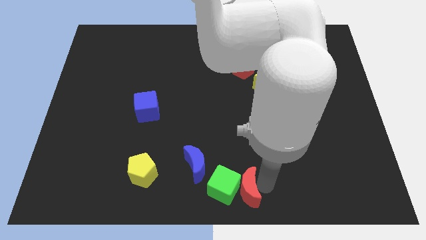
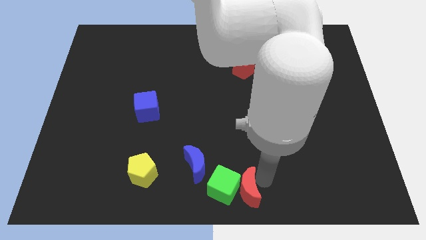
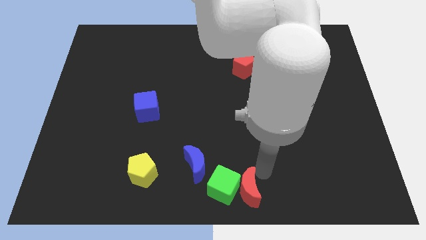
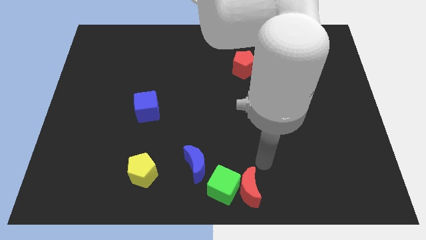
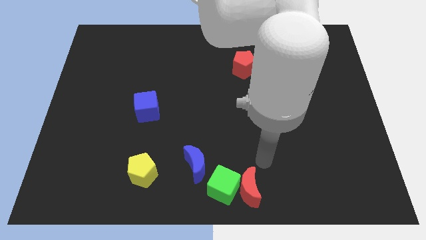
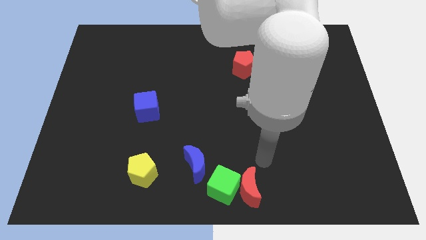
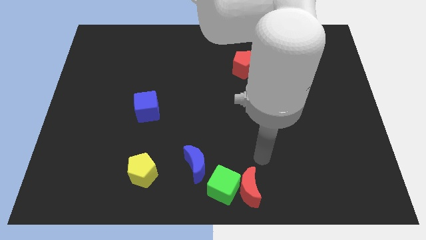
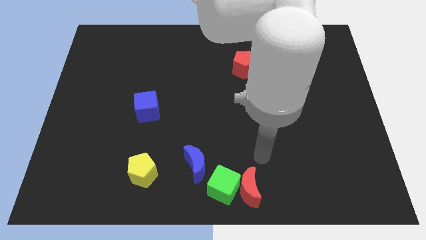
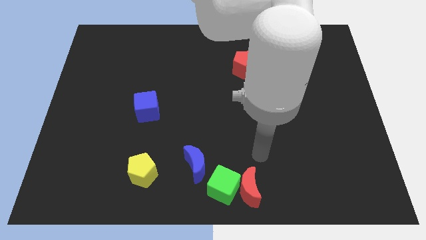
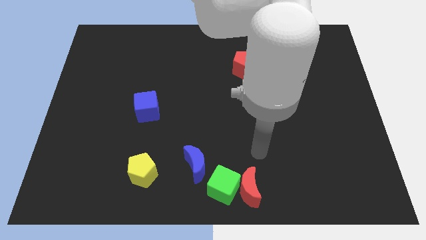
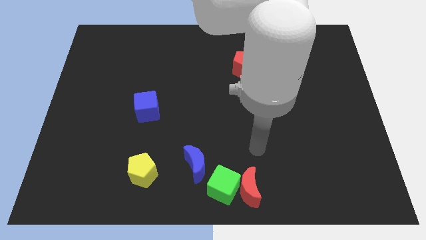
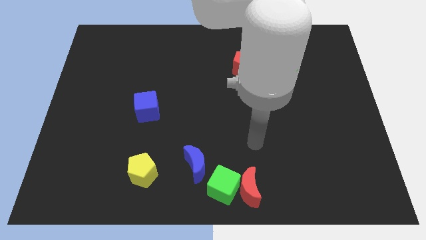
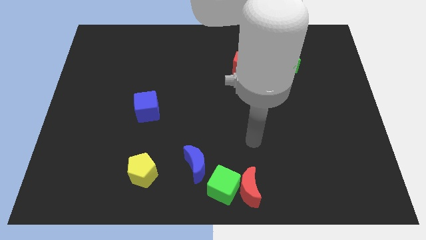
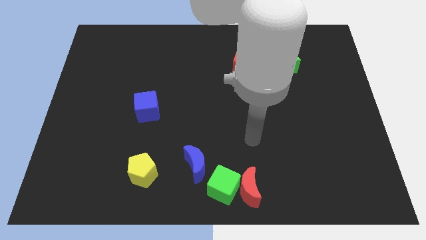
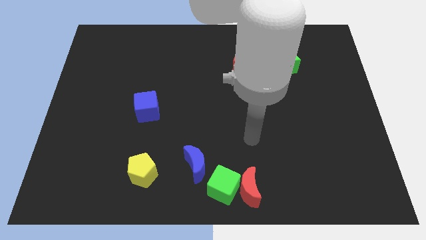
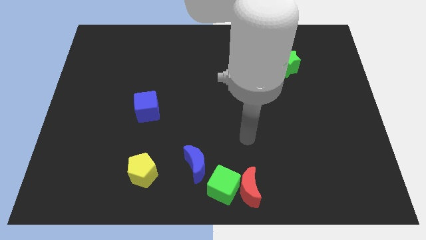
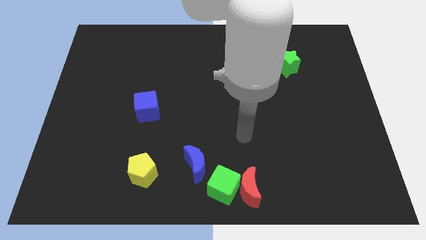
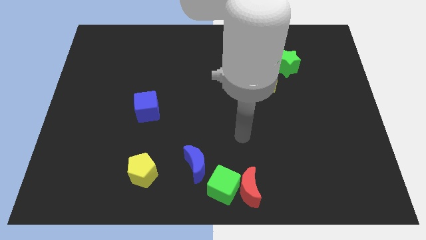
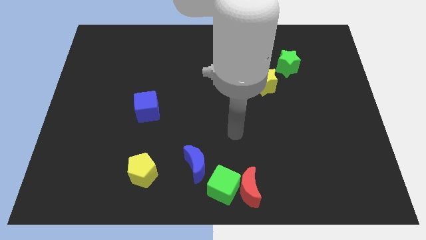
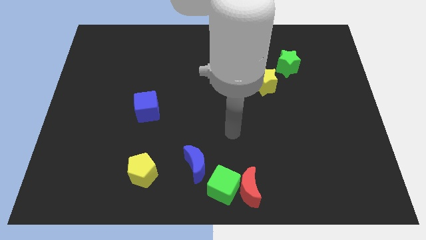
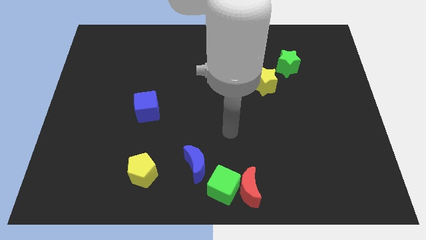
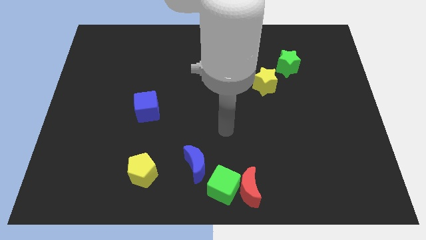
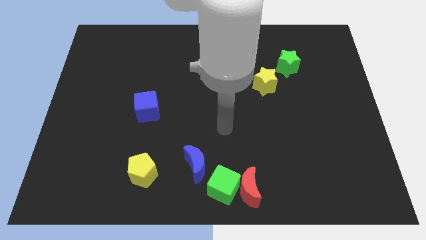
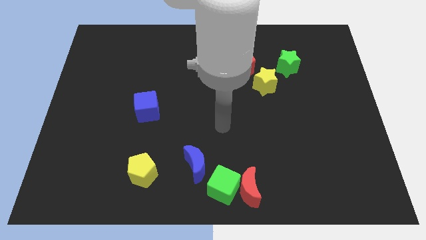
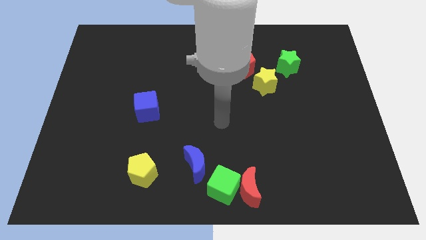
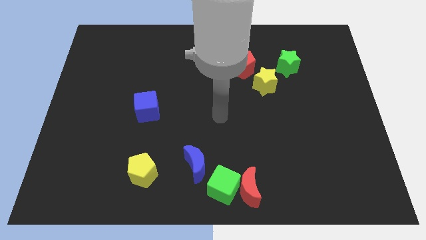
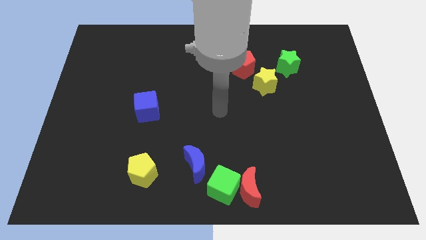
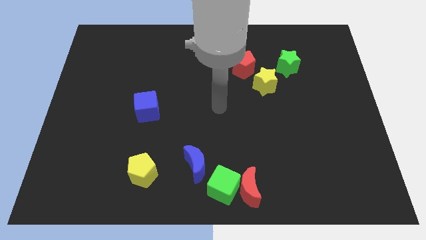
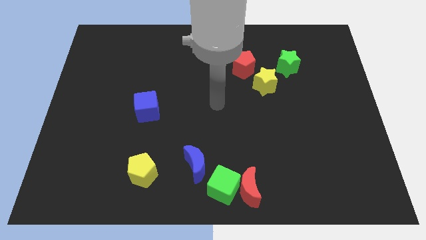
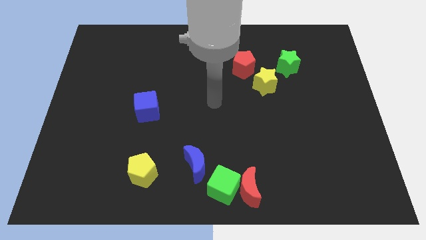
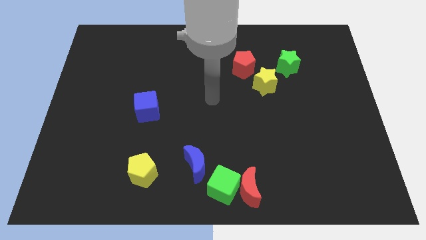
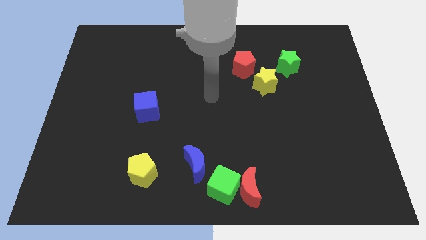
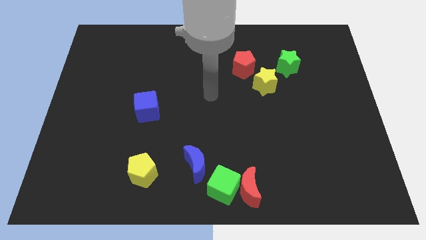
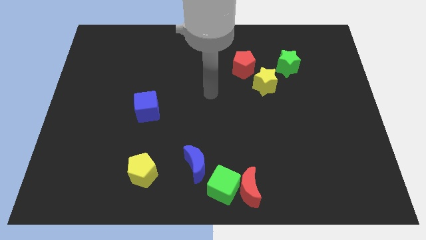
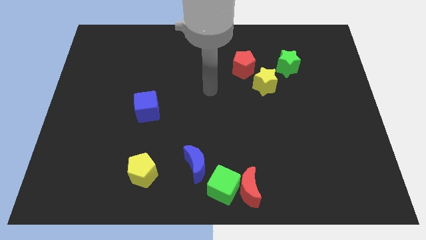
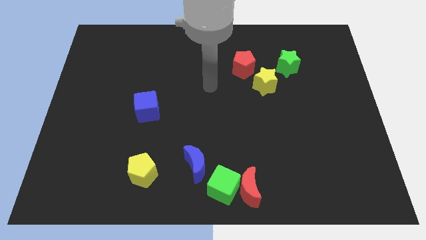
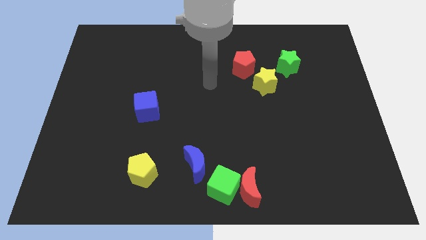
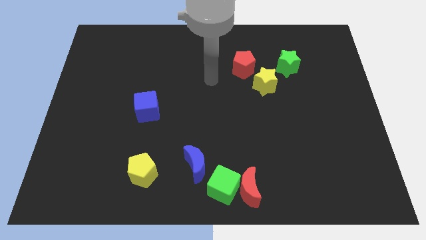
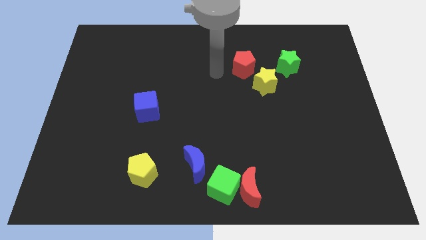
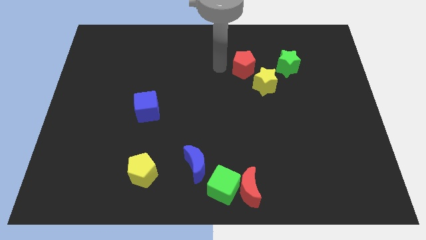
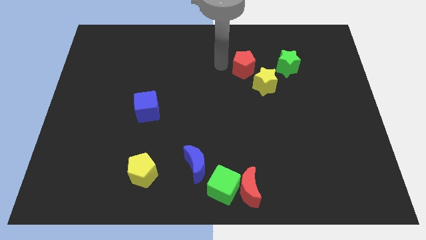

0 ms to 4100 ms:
move your arm away from red moon

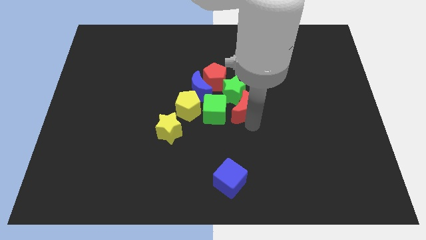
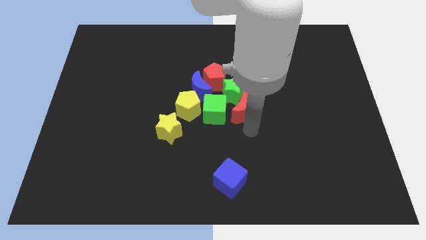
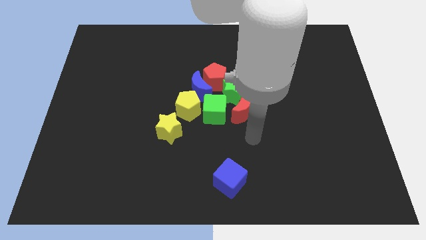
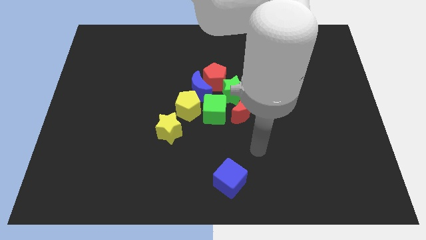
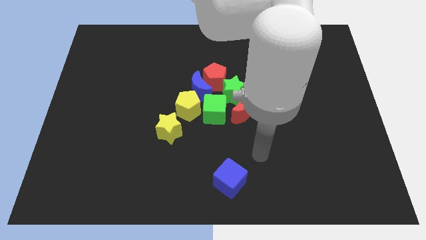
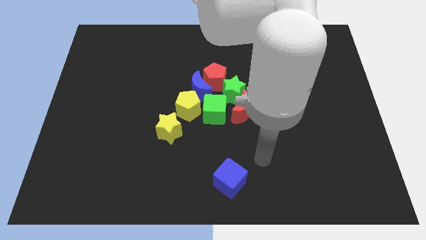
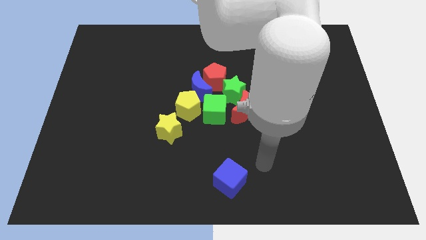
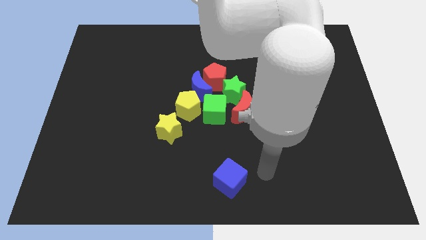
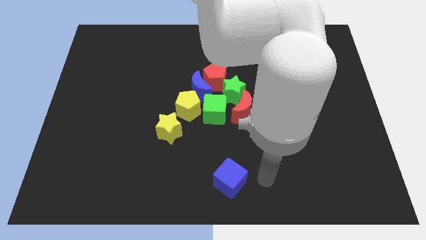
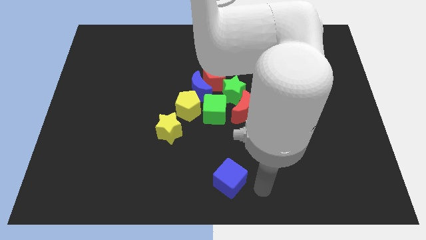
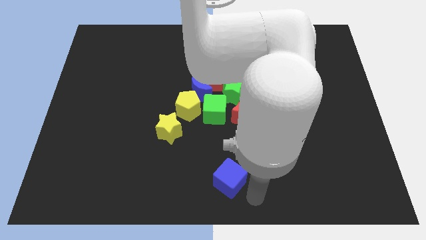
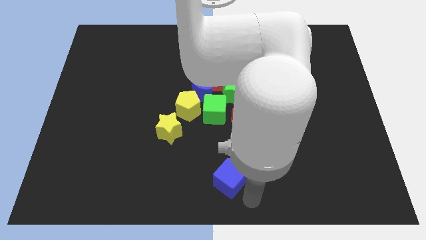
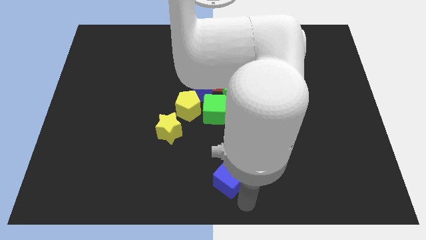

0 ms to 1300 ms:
place your arm to the bottom center of the board

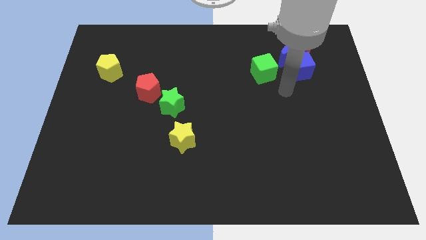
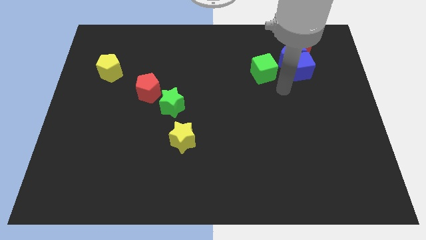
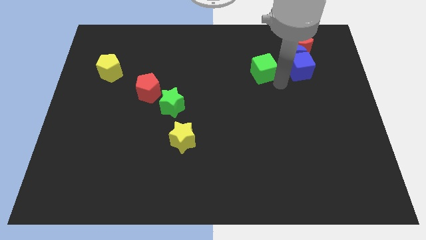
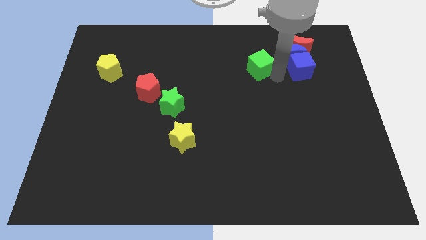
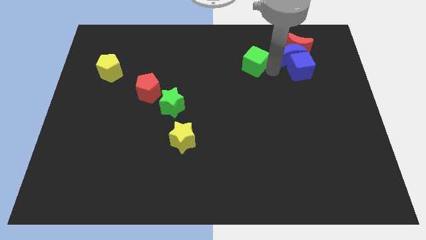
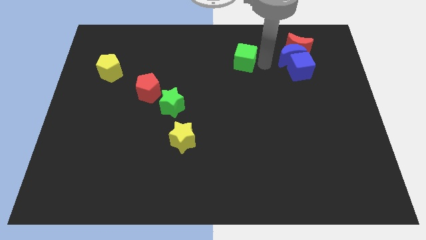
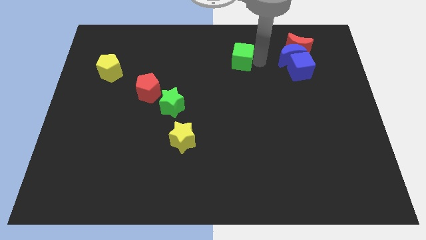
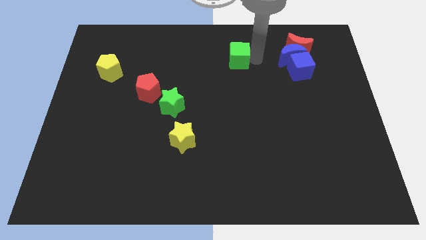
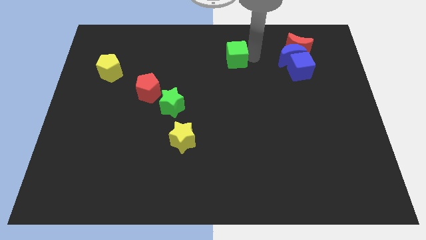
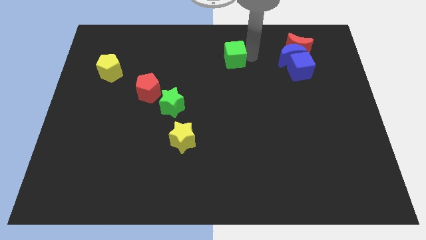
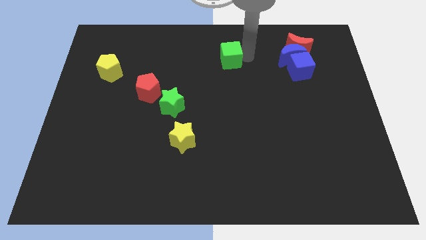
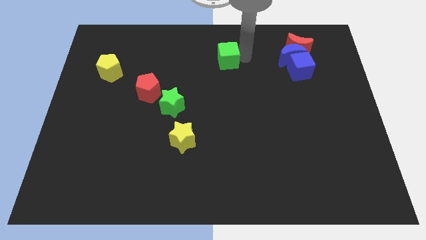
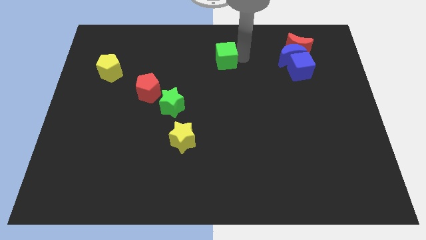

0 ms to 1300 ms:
move the green cube slightly towards the top of the board

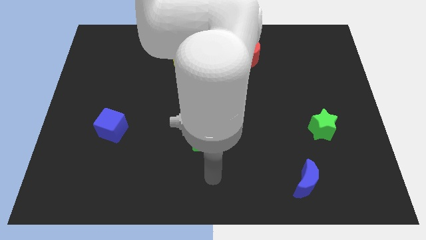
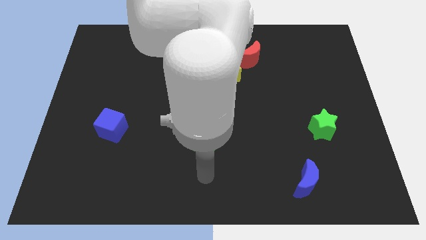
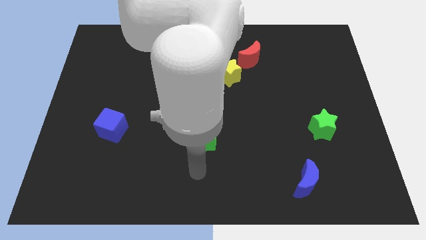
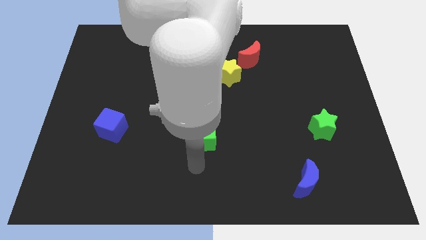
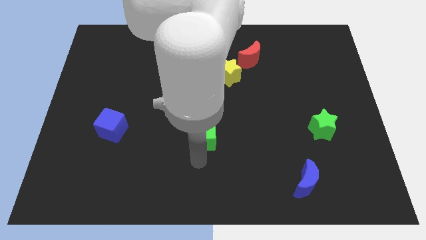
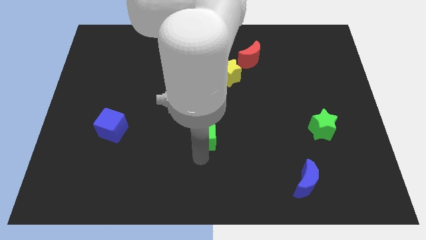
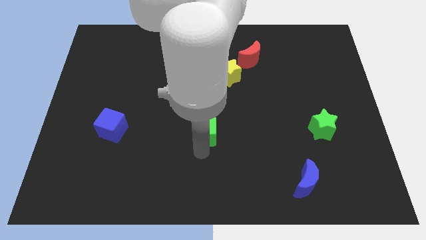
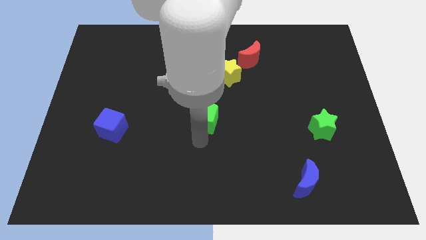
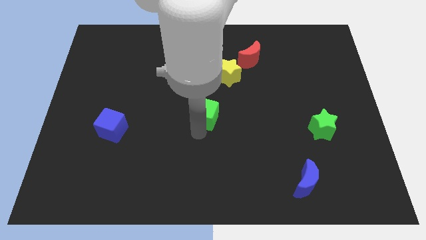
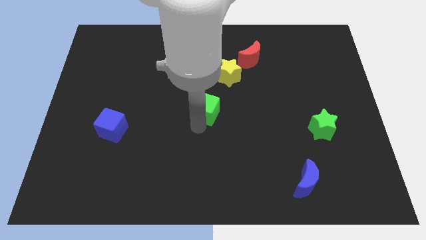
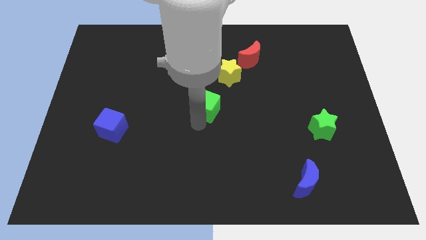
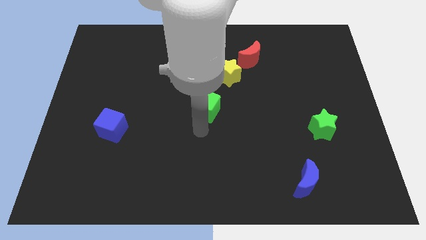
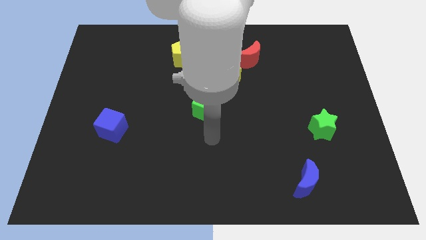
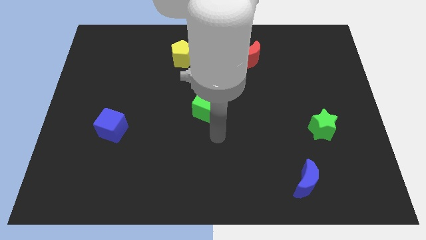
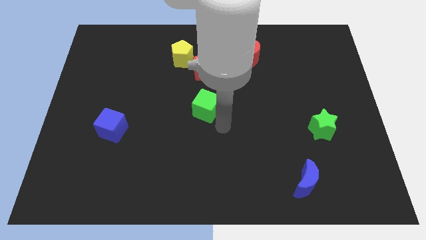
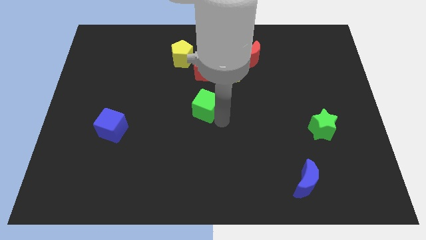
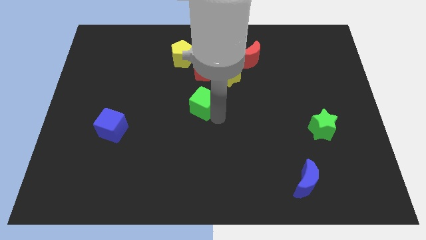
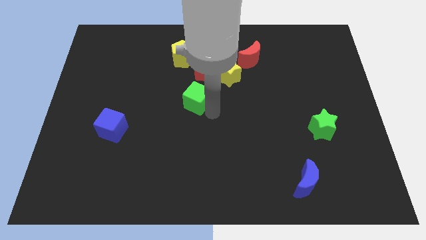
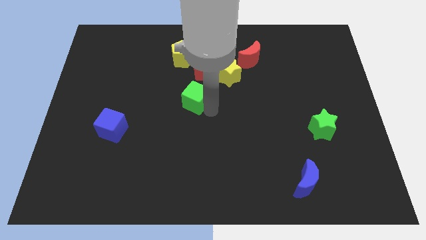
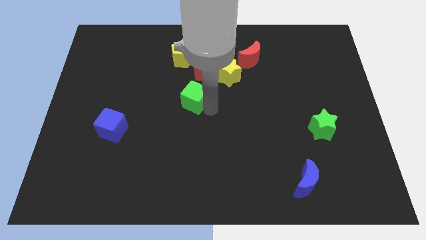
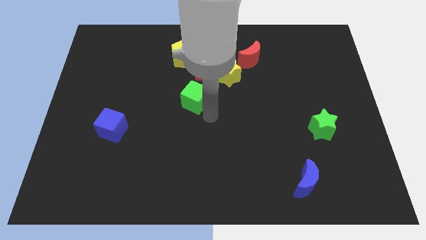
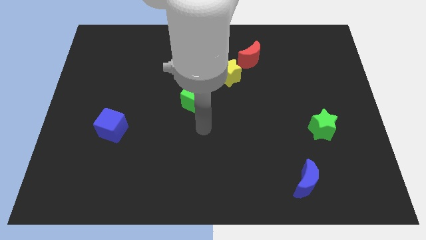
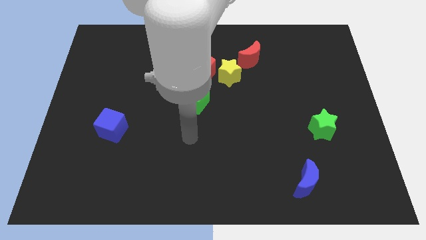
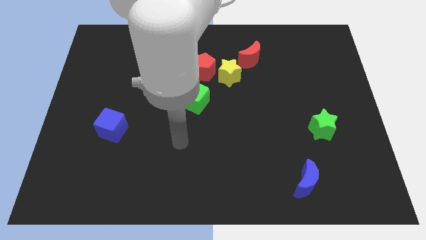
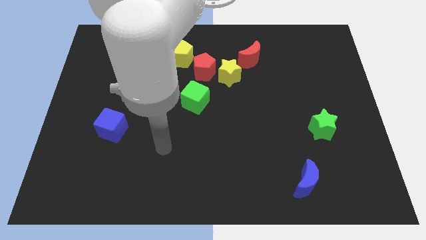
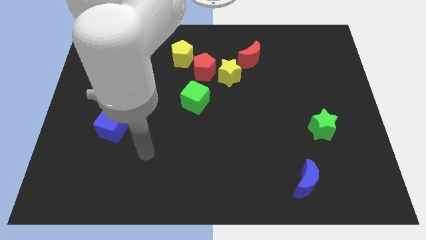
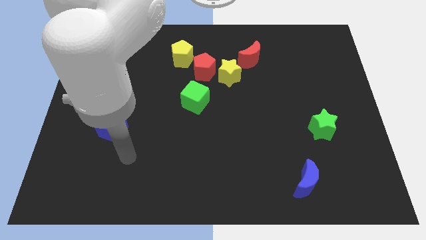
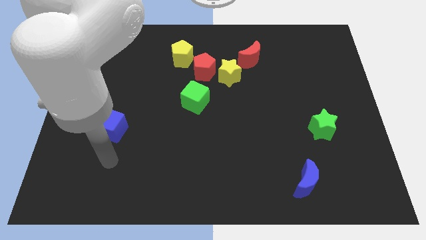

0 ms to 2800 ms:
place green cube at center
